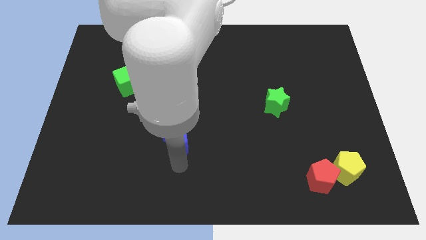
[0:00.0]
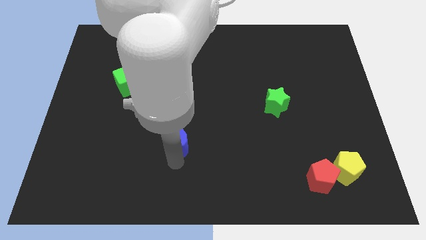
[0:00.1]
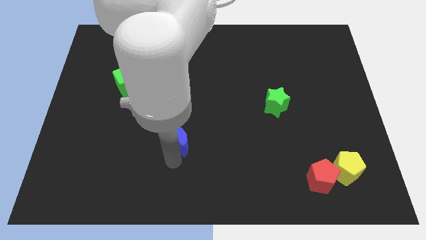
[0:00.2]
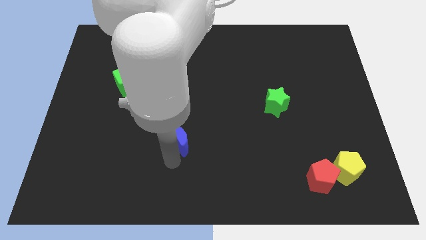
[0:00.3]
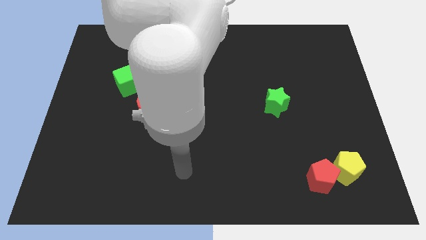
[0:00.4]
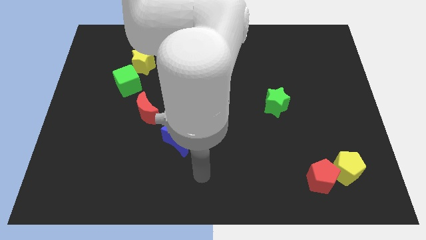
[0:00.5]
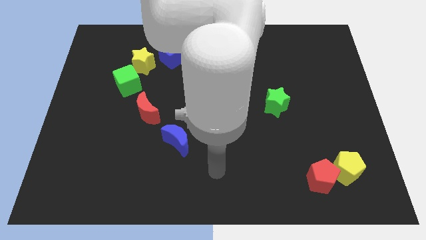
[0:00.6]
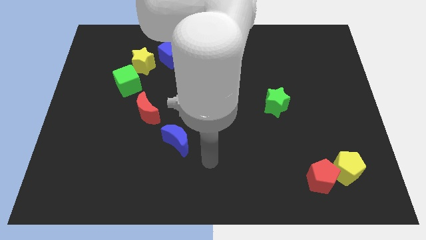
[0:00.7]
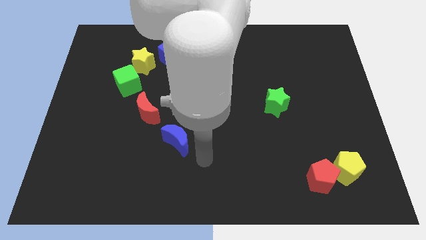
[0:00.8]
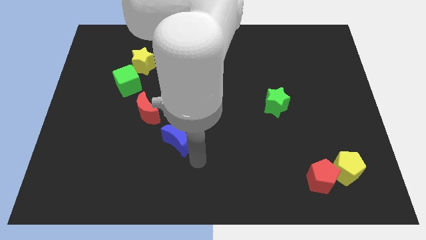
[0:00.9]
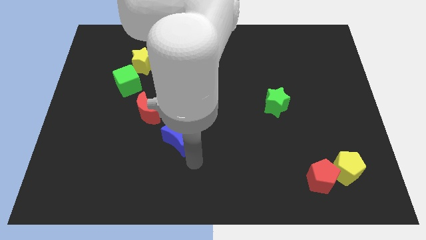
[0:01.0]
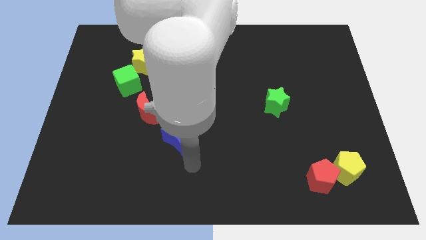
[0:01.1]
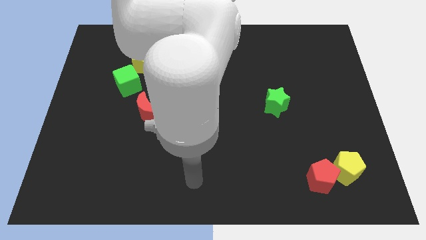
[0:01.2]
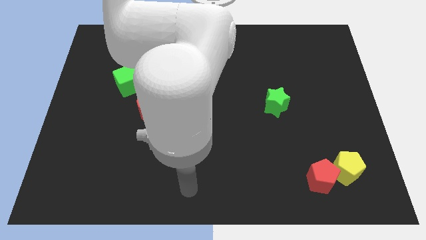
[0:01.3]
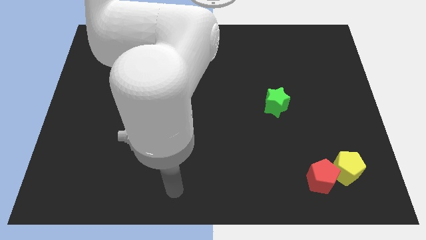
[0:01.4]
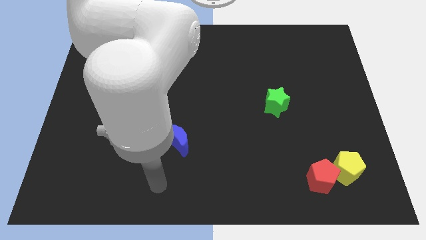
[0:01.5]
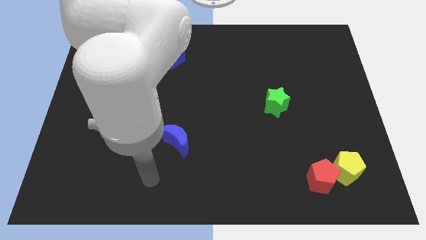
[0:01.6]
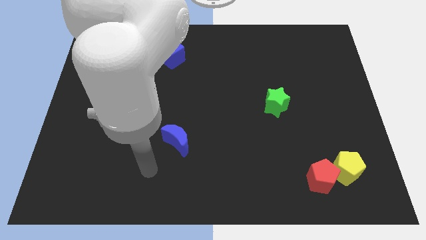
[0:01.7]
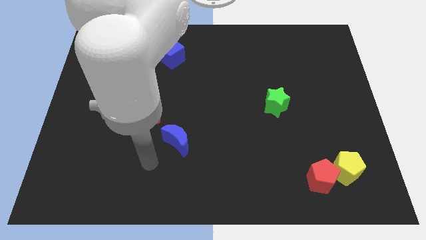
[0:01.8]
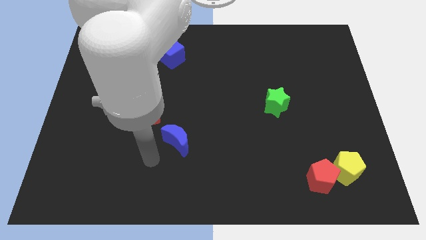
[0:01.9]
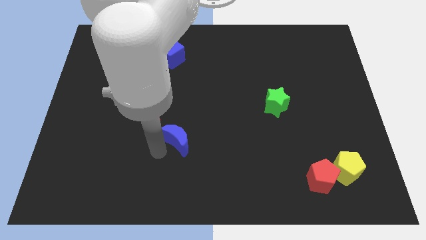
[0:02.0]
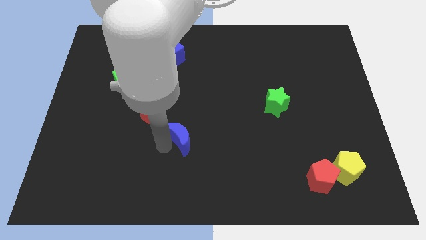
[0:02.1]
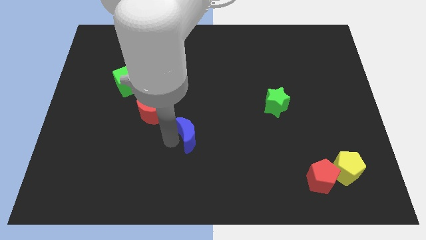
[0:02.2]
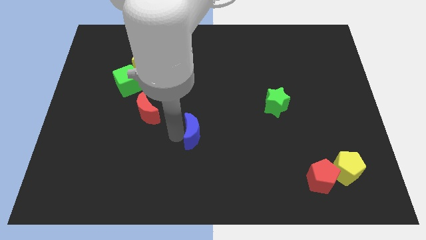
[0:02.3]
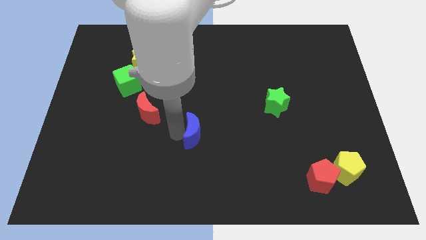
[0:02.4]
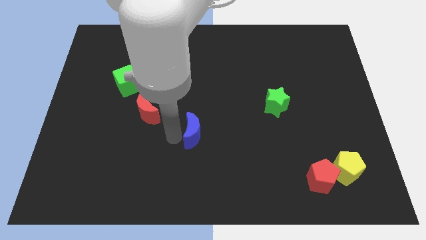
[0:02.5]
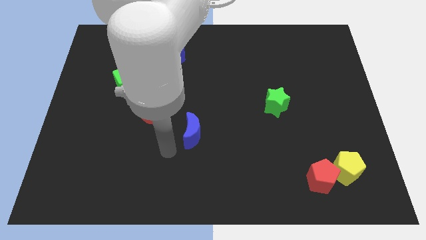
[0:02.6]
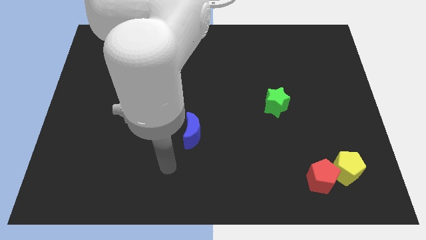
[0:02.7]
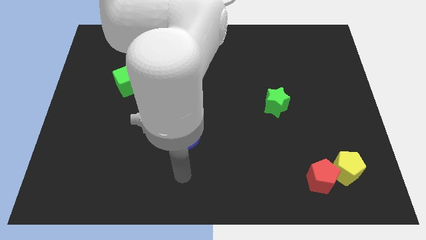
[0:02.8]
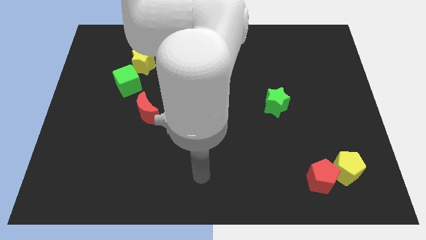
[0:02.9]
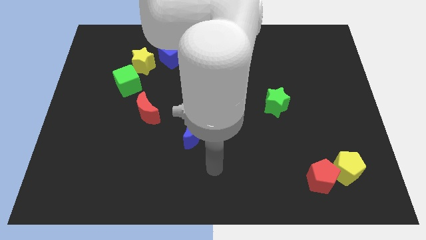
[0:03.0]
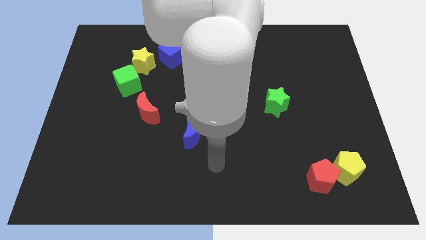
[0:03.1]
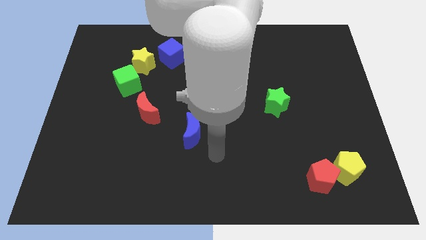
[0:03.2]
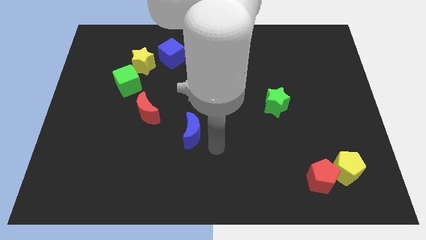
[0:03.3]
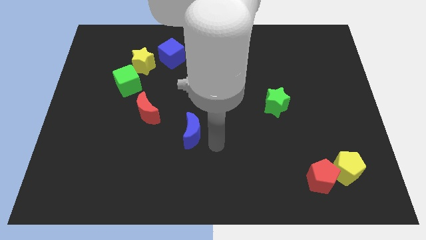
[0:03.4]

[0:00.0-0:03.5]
move the blue crescent slightly to the top

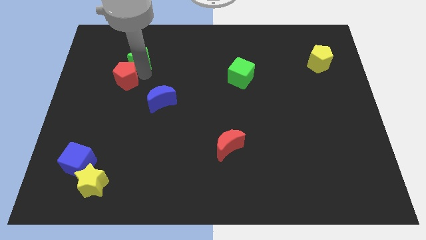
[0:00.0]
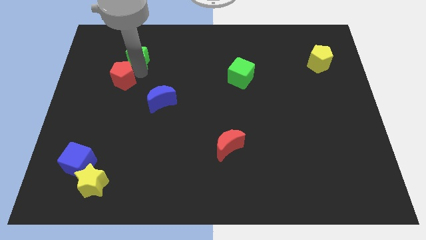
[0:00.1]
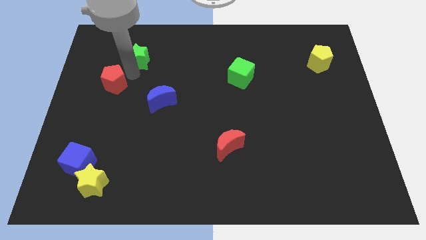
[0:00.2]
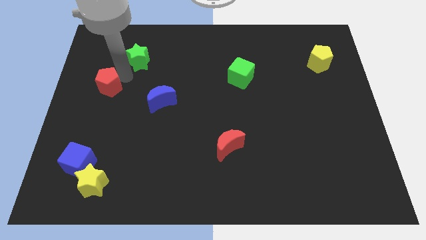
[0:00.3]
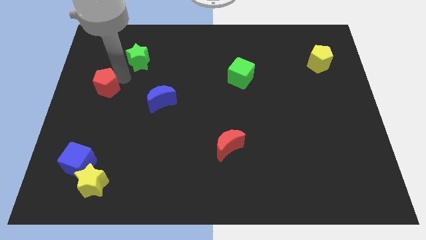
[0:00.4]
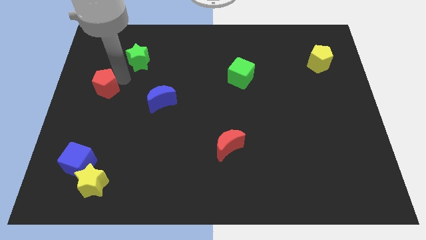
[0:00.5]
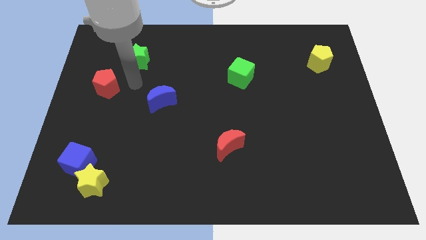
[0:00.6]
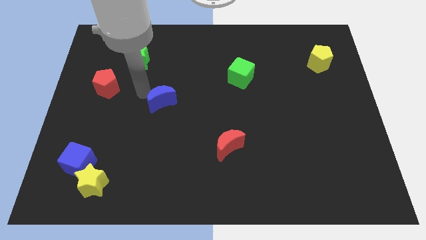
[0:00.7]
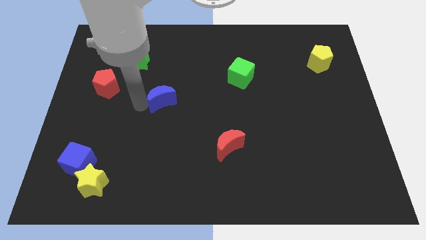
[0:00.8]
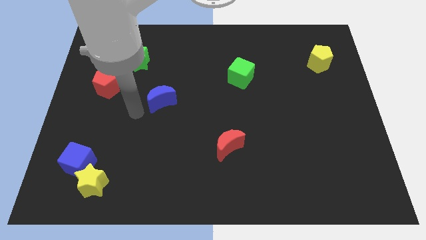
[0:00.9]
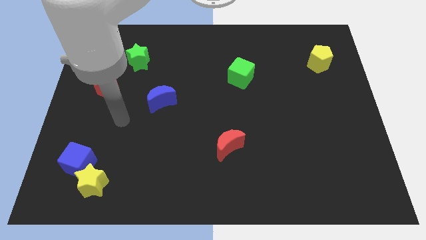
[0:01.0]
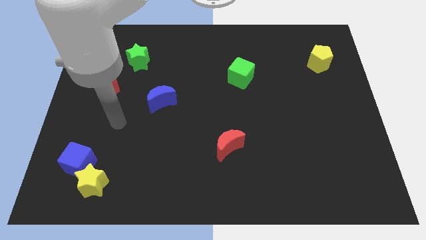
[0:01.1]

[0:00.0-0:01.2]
separate red pentagon from green star

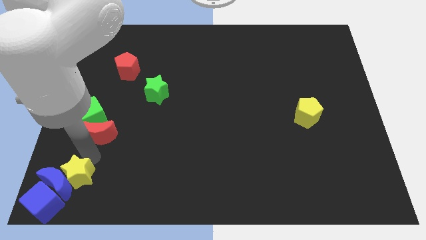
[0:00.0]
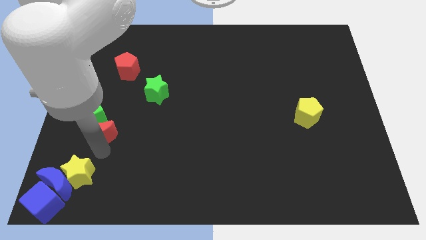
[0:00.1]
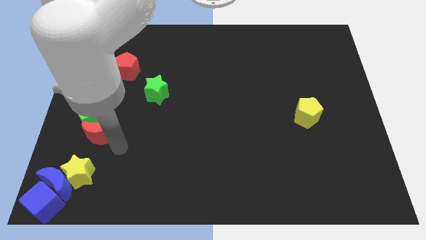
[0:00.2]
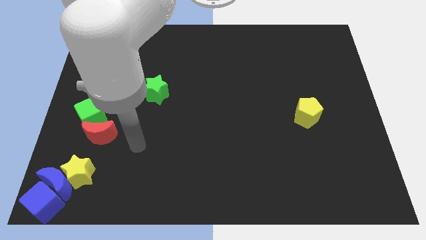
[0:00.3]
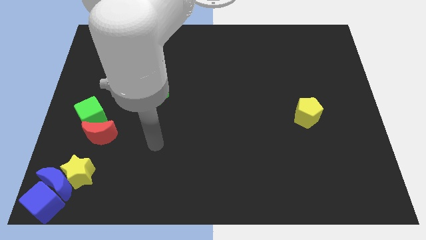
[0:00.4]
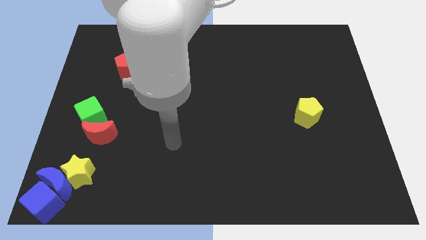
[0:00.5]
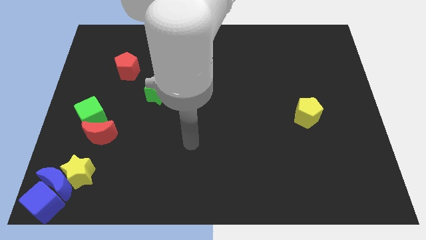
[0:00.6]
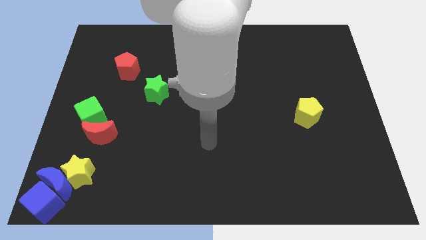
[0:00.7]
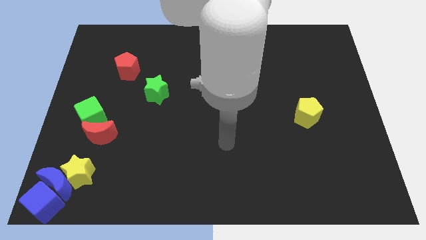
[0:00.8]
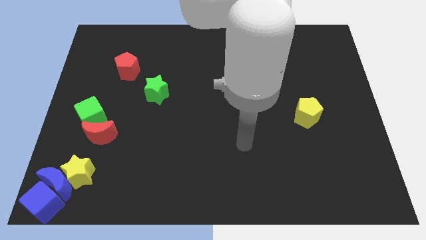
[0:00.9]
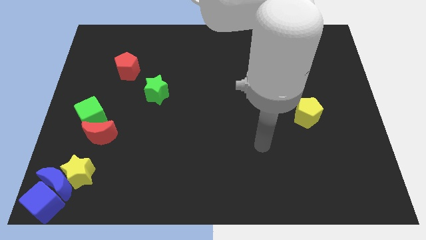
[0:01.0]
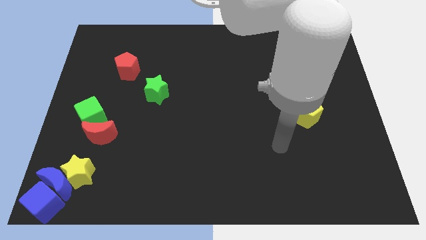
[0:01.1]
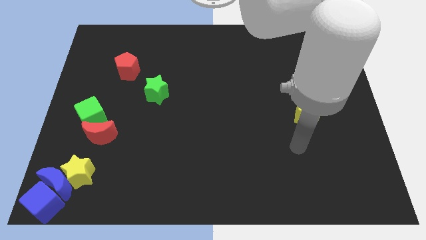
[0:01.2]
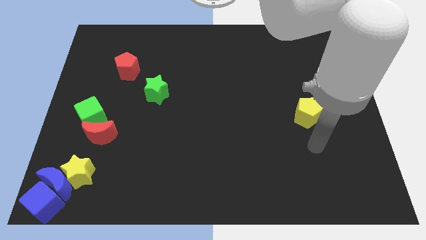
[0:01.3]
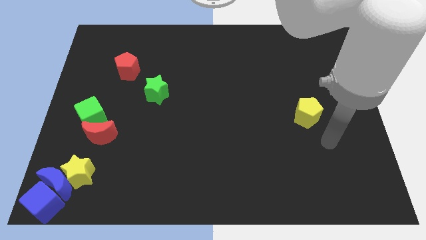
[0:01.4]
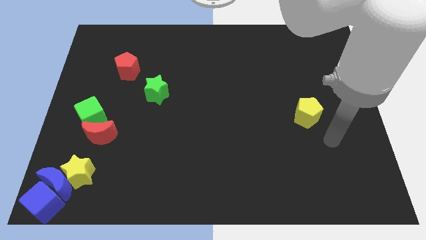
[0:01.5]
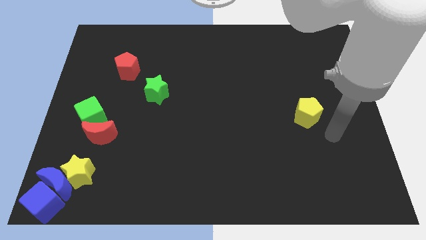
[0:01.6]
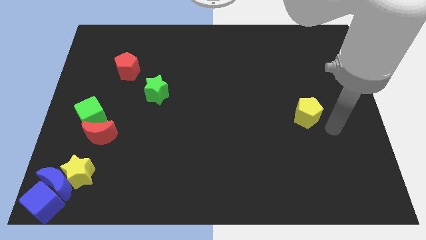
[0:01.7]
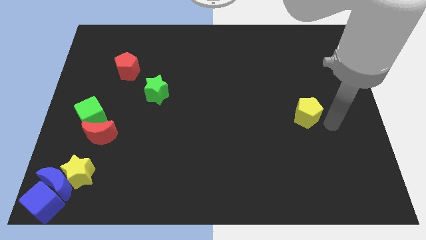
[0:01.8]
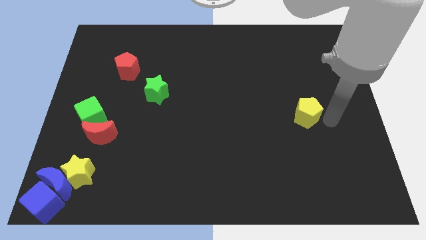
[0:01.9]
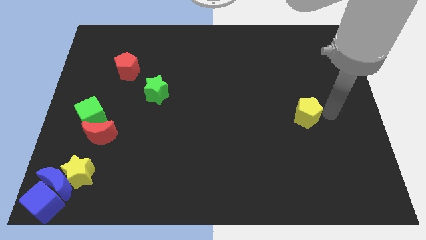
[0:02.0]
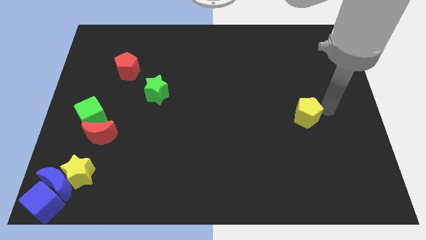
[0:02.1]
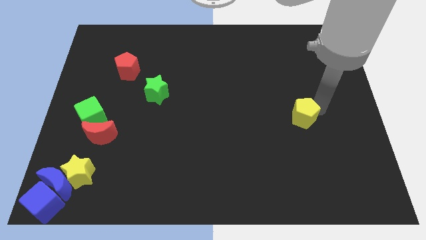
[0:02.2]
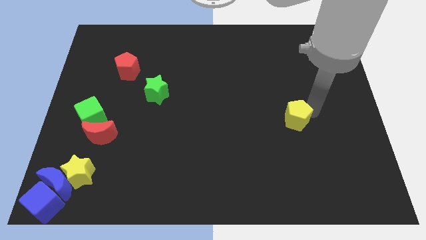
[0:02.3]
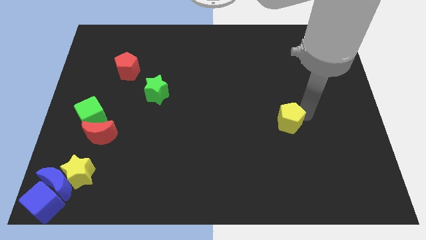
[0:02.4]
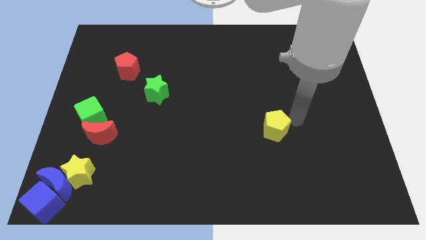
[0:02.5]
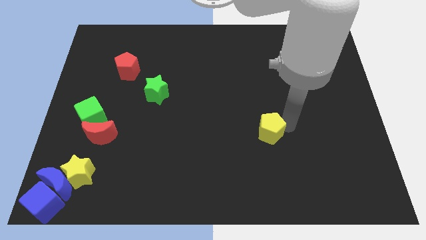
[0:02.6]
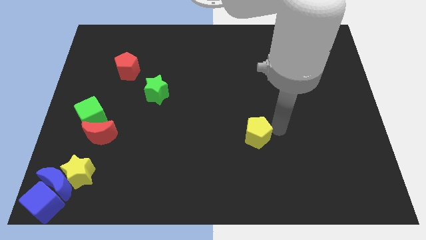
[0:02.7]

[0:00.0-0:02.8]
slightly push the yellow pentagon towards the bottom center of the board

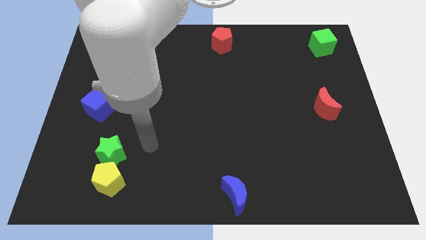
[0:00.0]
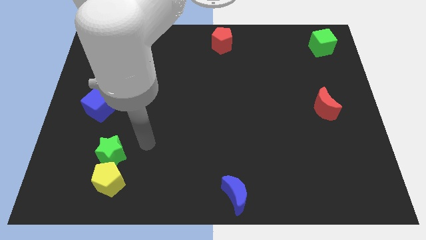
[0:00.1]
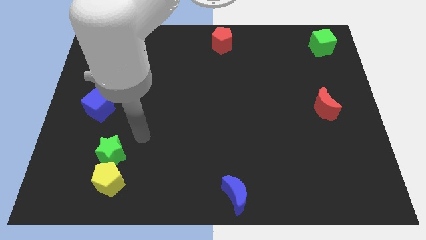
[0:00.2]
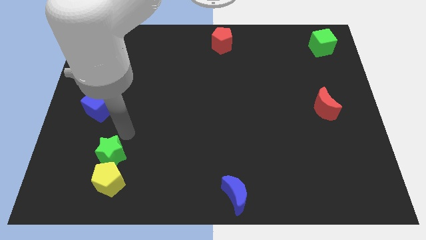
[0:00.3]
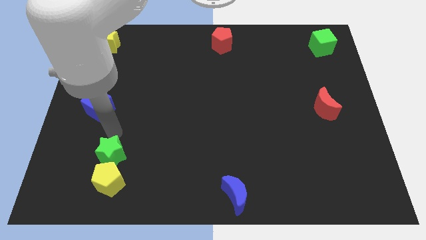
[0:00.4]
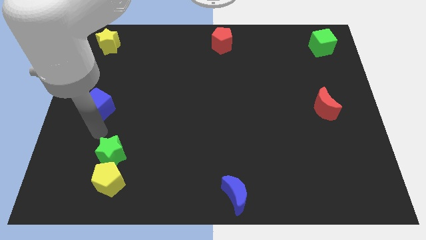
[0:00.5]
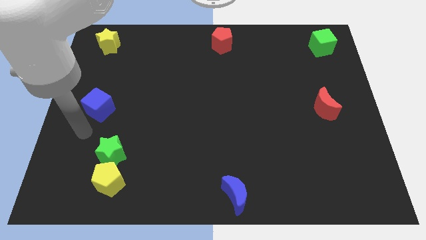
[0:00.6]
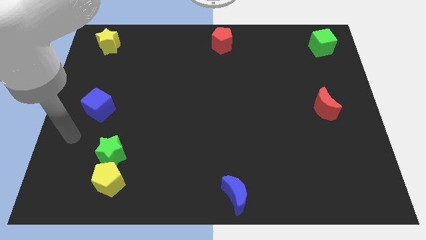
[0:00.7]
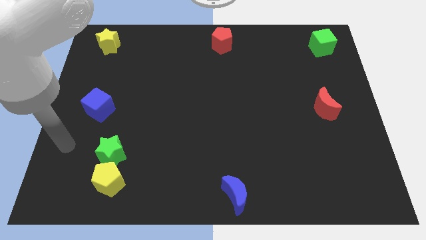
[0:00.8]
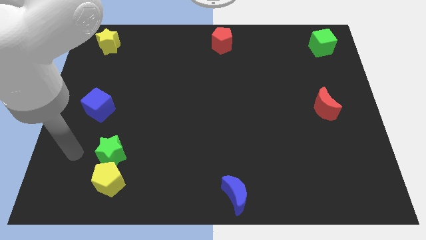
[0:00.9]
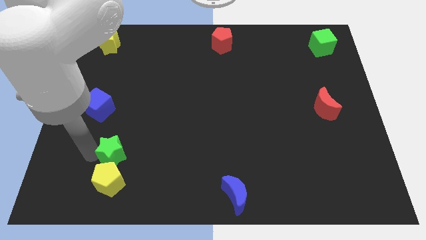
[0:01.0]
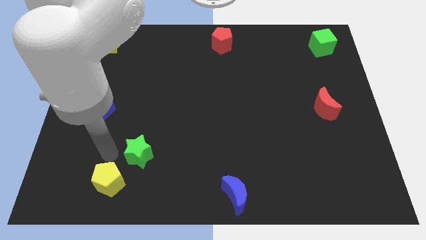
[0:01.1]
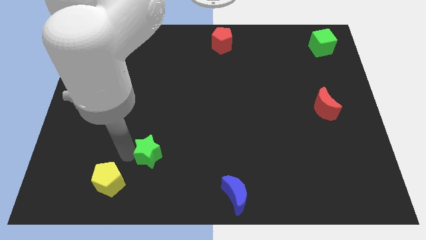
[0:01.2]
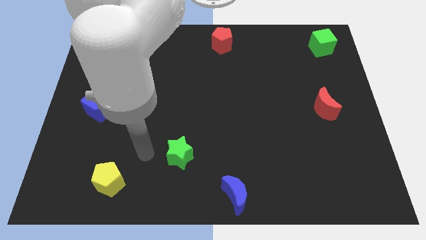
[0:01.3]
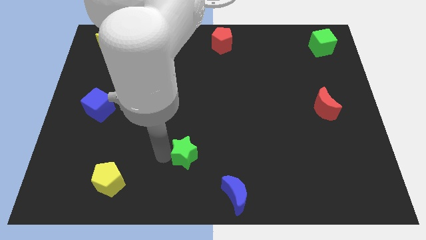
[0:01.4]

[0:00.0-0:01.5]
separate the green star from the yellow pentagon
